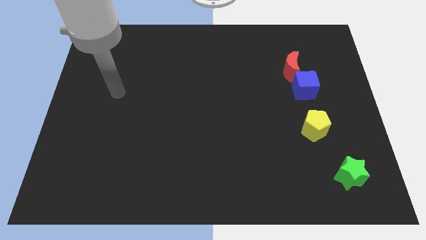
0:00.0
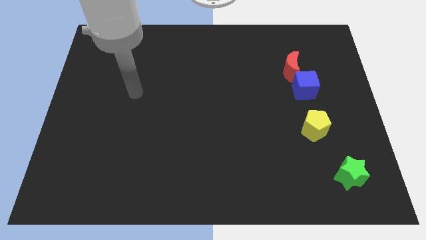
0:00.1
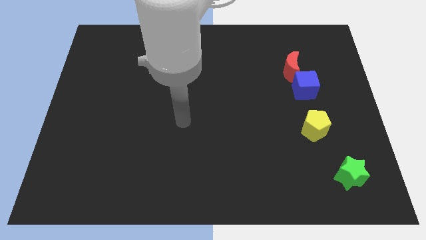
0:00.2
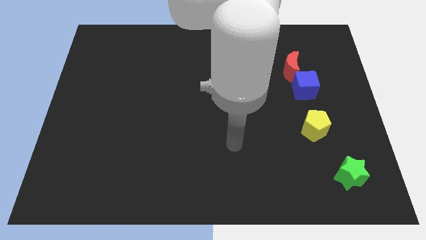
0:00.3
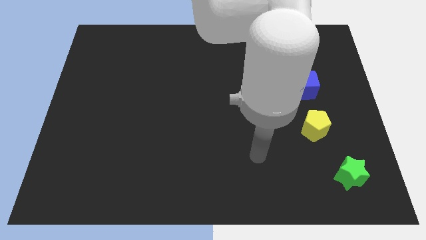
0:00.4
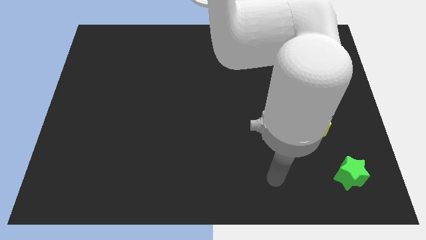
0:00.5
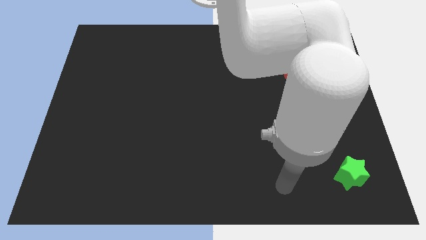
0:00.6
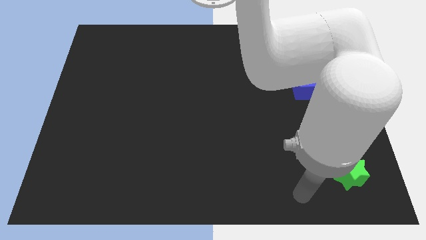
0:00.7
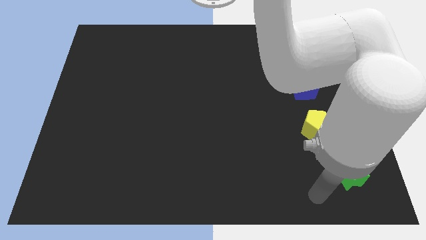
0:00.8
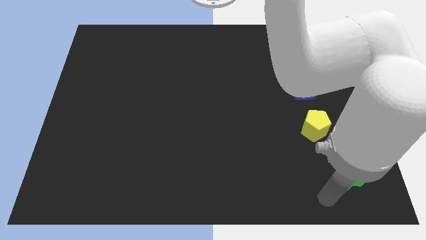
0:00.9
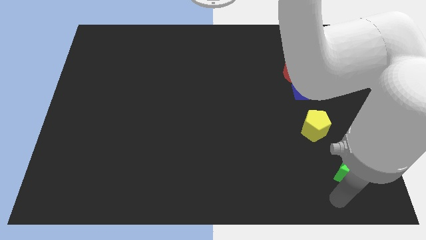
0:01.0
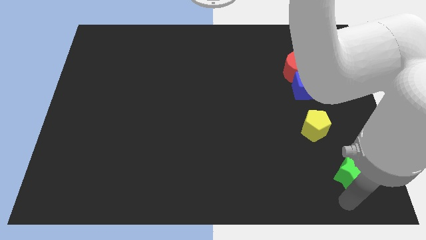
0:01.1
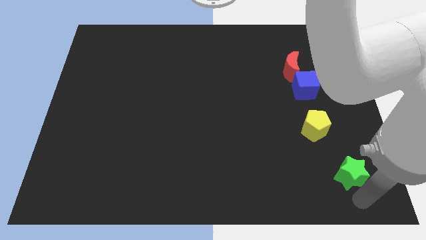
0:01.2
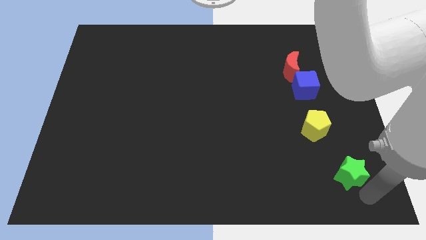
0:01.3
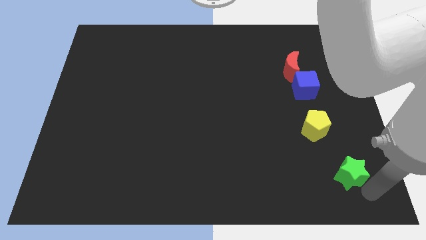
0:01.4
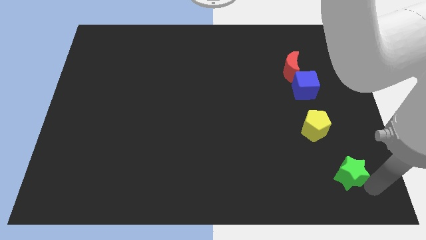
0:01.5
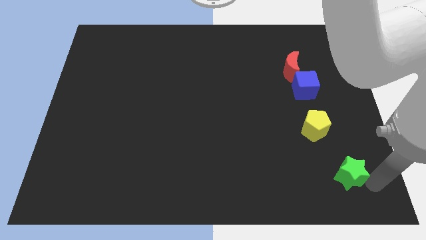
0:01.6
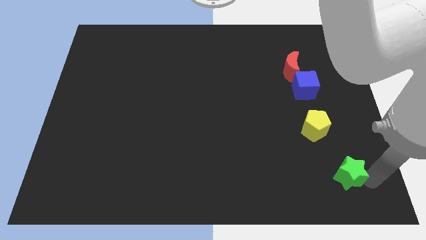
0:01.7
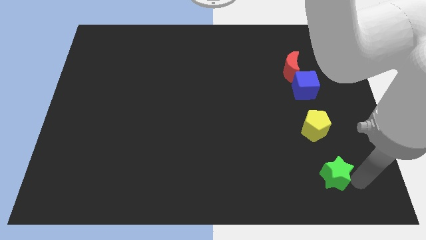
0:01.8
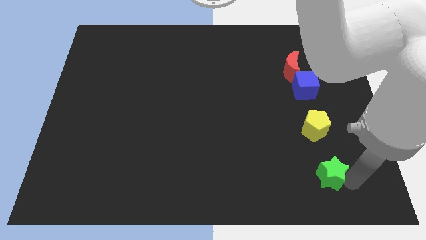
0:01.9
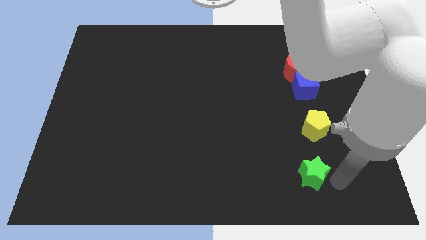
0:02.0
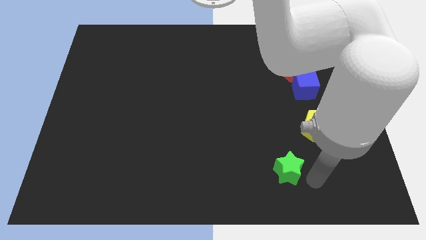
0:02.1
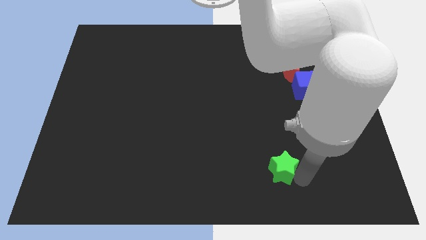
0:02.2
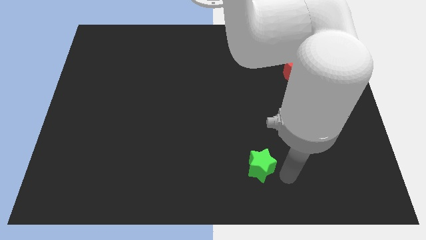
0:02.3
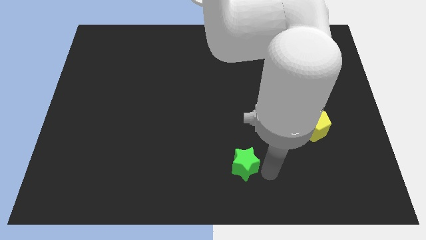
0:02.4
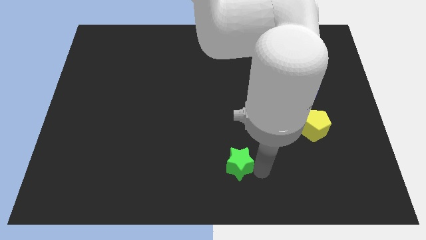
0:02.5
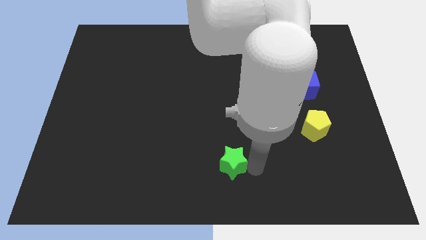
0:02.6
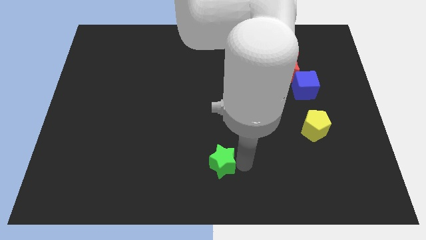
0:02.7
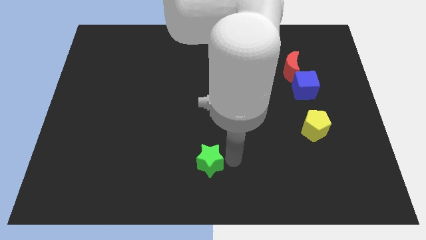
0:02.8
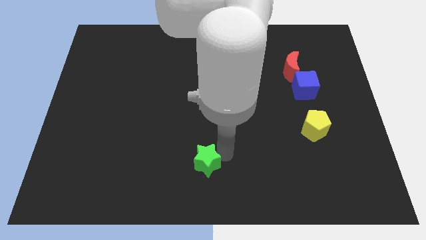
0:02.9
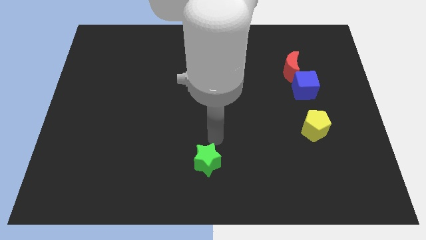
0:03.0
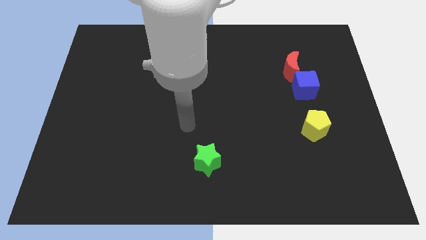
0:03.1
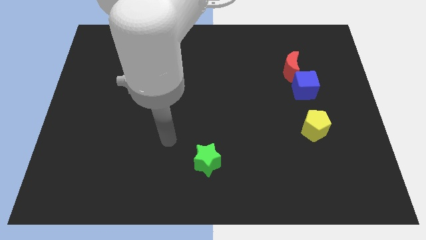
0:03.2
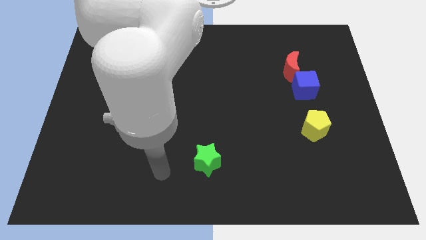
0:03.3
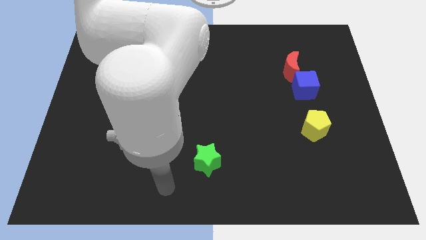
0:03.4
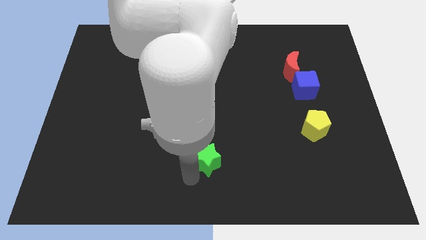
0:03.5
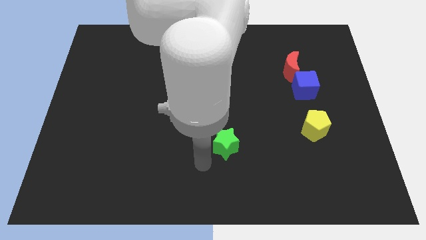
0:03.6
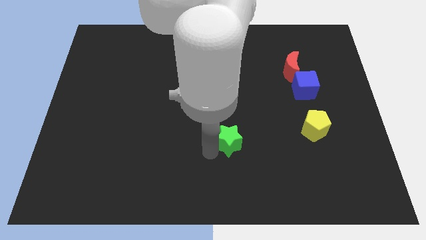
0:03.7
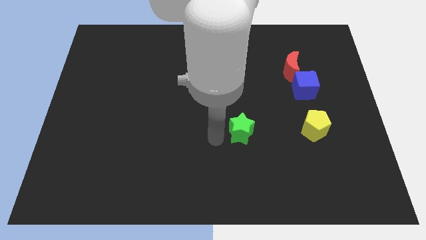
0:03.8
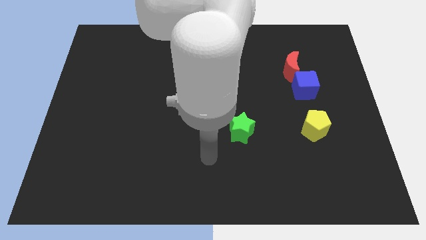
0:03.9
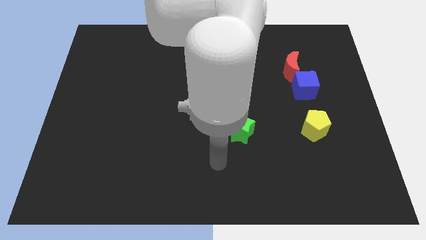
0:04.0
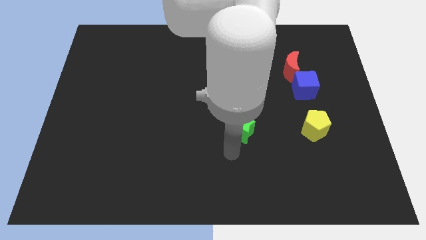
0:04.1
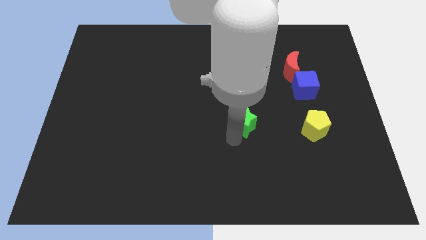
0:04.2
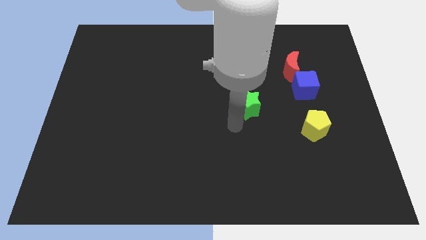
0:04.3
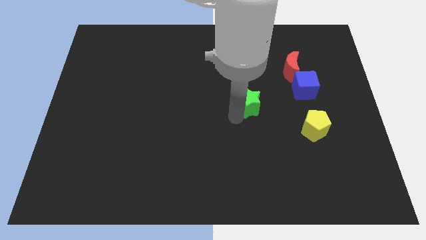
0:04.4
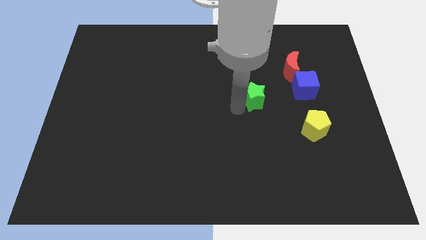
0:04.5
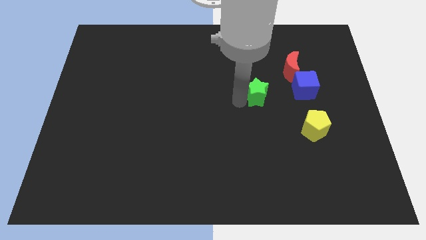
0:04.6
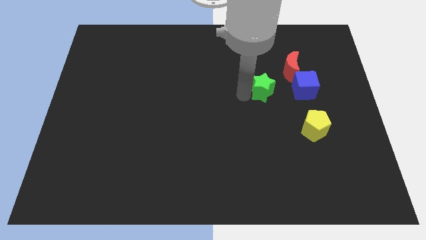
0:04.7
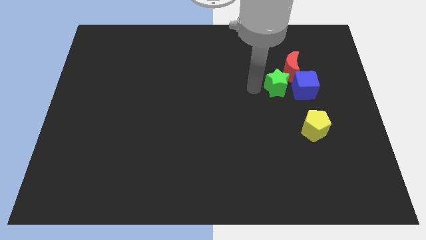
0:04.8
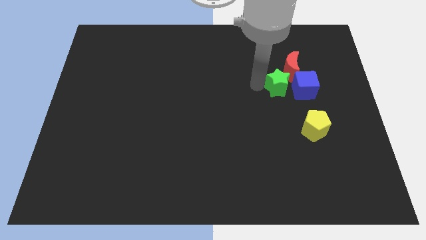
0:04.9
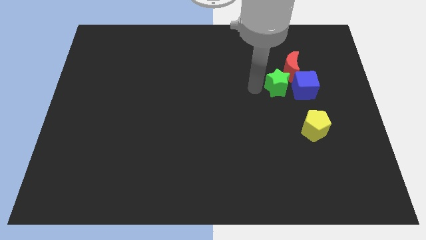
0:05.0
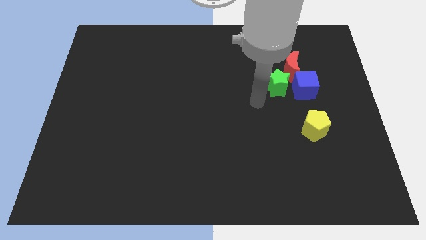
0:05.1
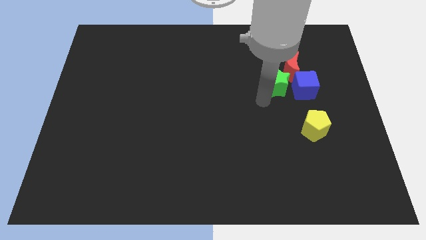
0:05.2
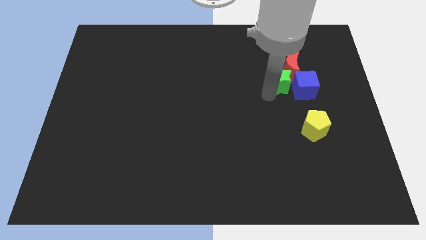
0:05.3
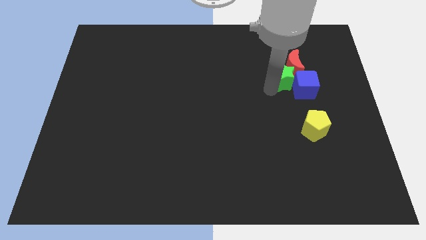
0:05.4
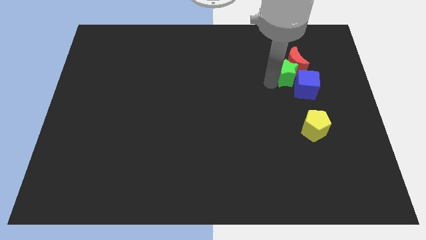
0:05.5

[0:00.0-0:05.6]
put the green block to the red moon

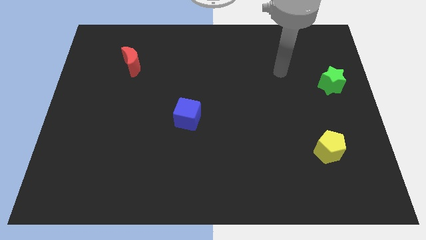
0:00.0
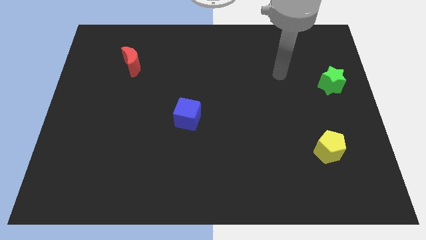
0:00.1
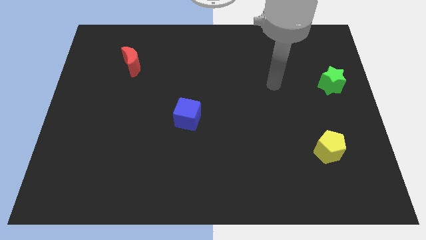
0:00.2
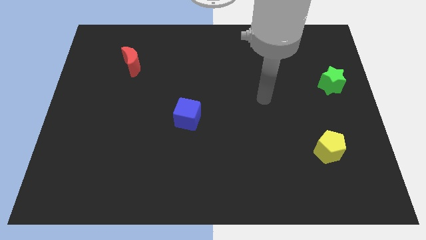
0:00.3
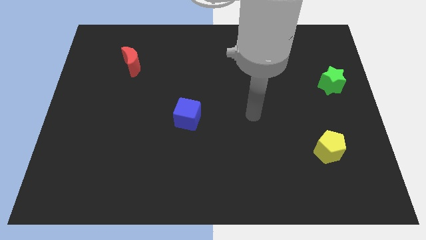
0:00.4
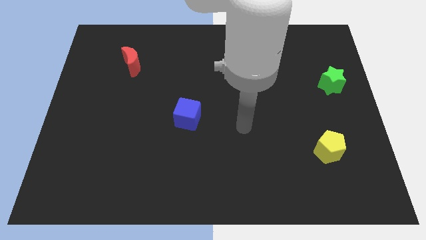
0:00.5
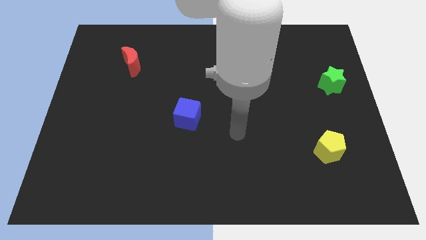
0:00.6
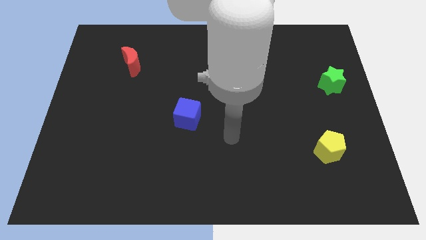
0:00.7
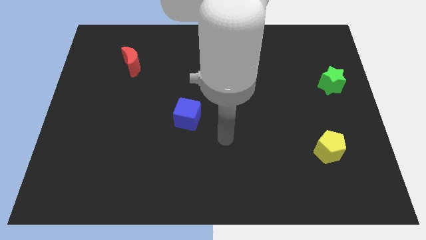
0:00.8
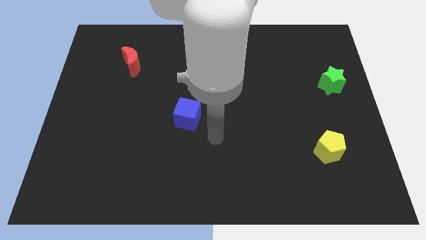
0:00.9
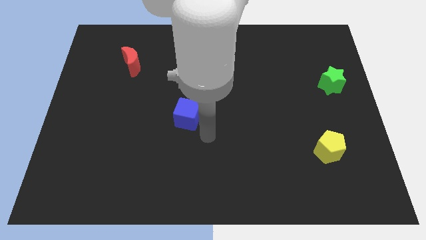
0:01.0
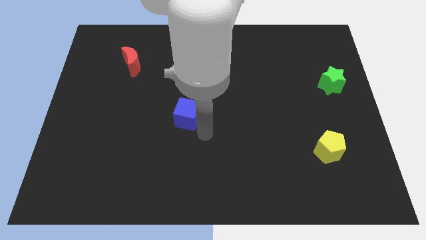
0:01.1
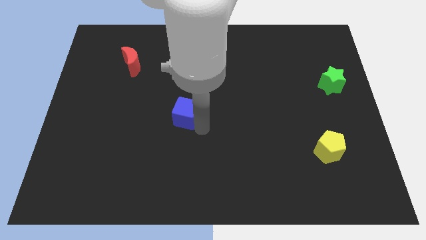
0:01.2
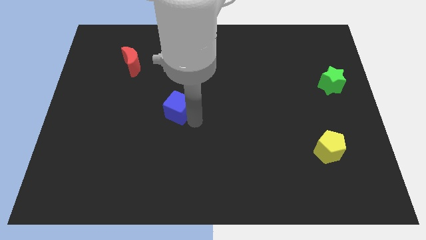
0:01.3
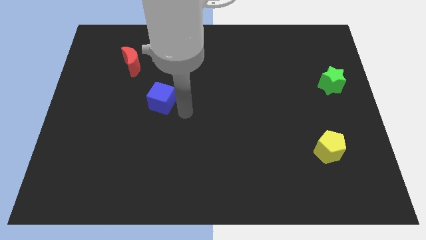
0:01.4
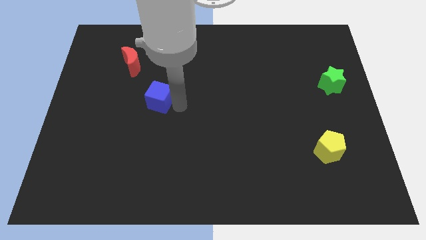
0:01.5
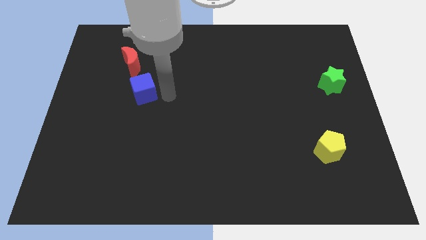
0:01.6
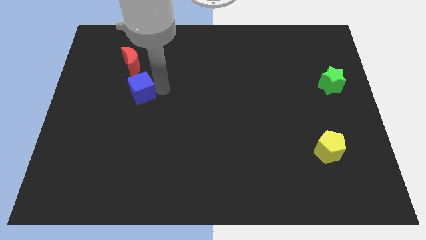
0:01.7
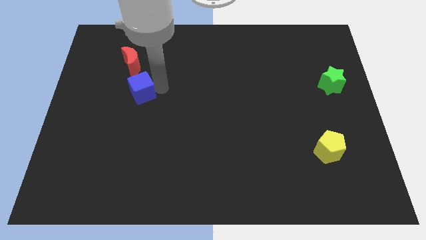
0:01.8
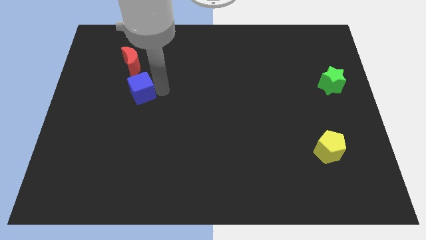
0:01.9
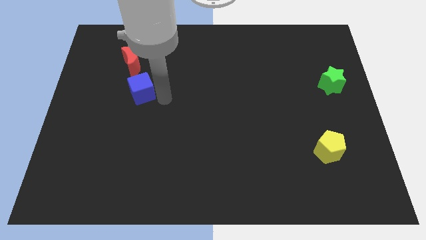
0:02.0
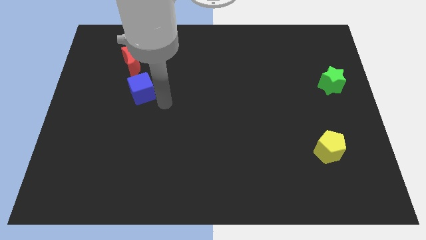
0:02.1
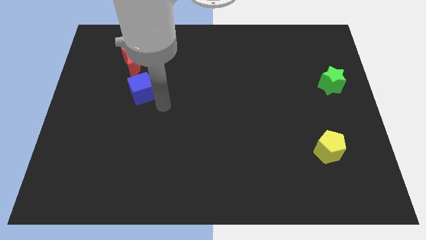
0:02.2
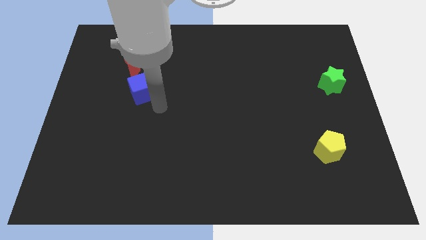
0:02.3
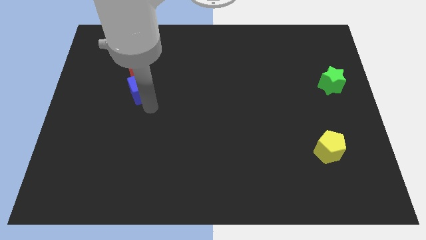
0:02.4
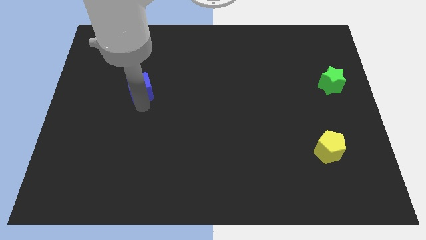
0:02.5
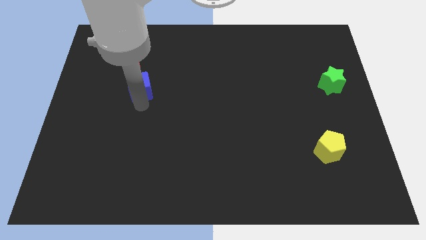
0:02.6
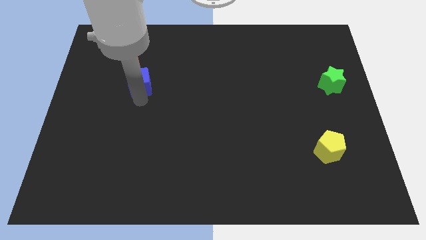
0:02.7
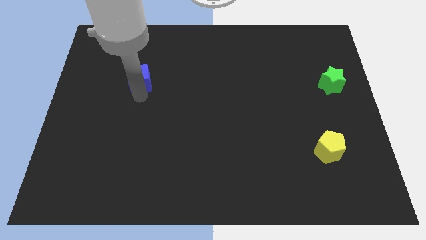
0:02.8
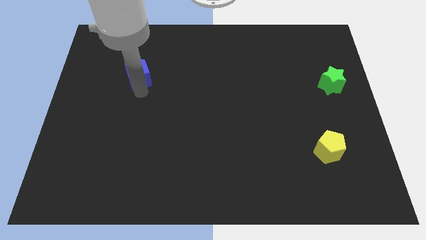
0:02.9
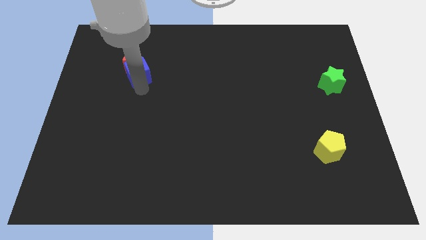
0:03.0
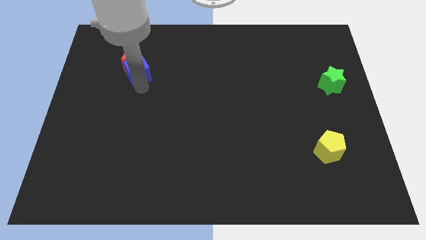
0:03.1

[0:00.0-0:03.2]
push the blue block close to the red moon

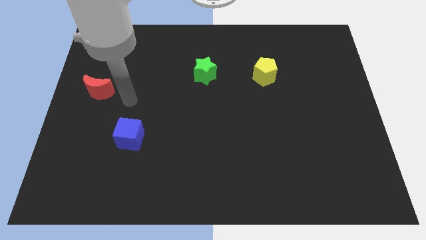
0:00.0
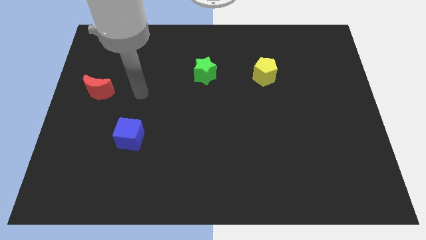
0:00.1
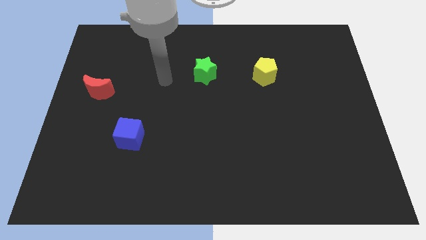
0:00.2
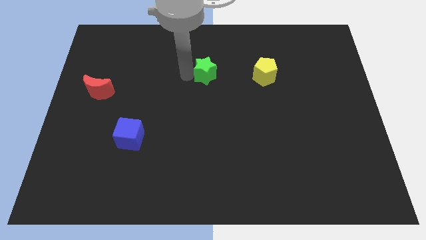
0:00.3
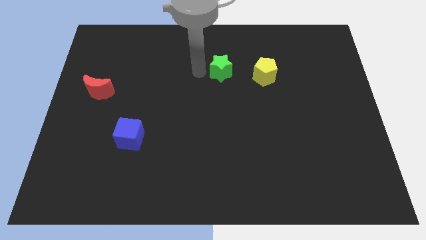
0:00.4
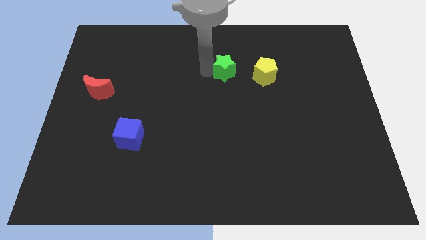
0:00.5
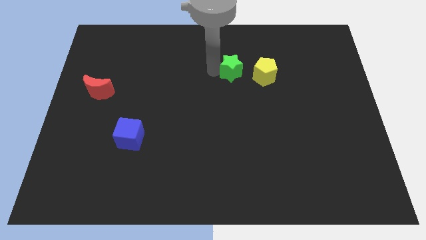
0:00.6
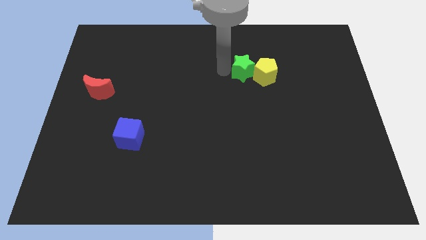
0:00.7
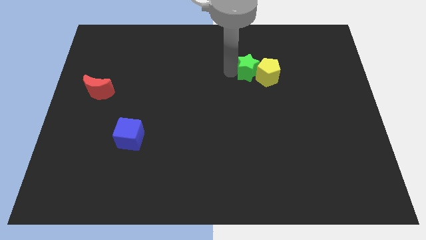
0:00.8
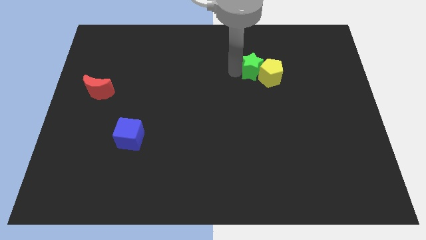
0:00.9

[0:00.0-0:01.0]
put the green block close to the pentagon
